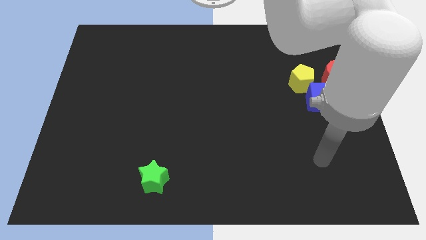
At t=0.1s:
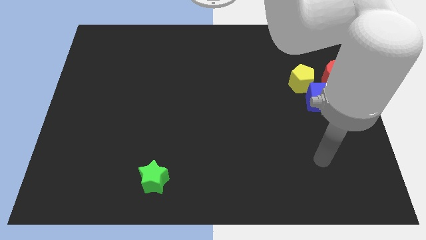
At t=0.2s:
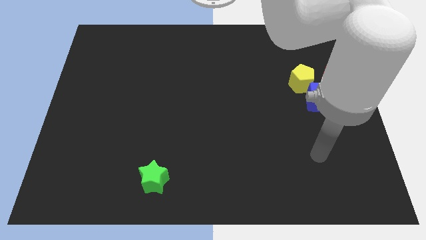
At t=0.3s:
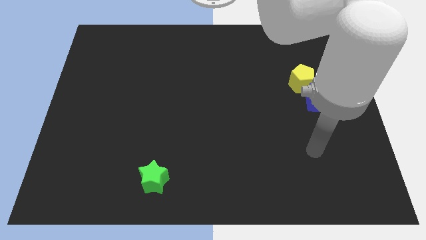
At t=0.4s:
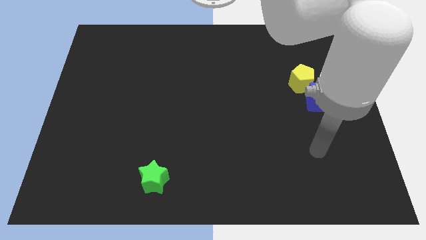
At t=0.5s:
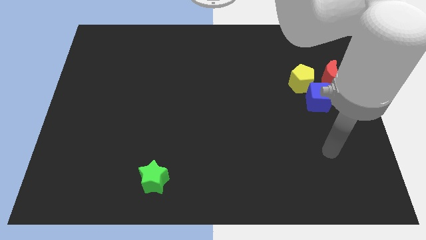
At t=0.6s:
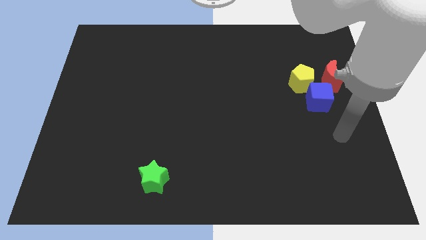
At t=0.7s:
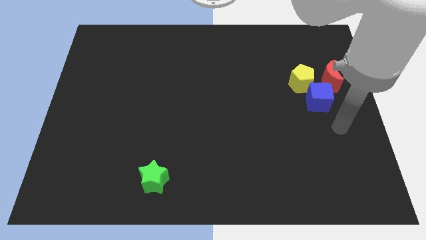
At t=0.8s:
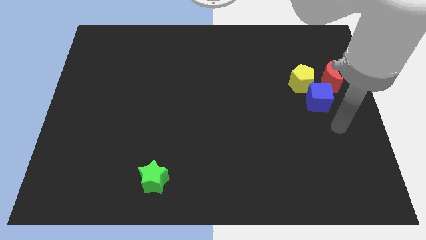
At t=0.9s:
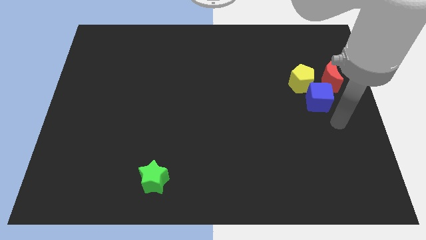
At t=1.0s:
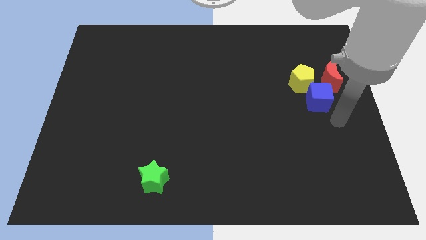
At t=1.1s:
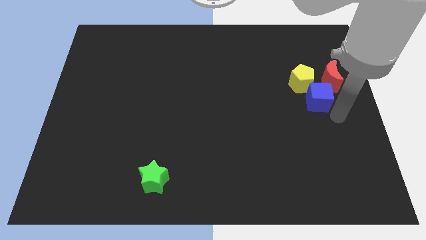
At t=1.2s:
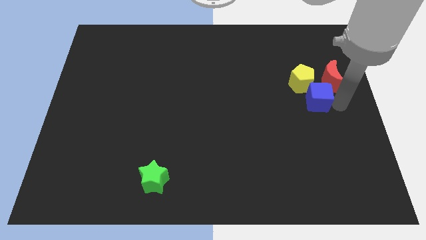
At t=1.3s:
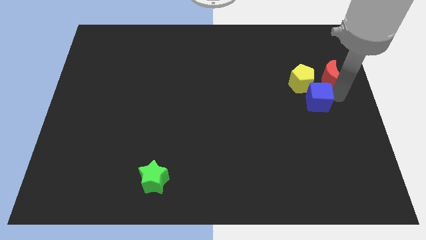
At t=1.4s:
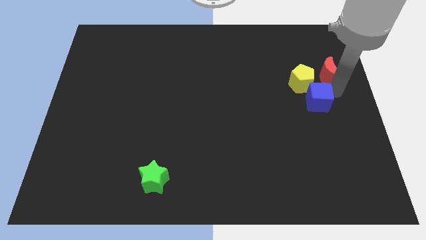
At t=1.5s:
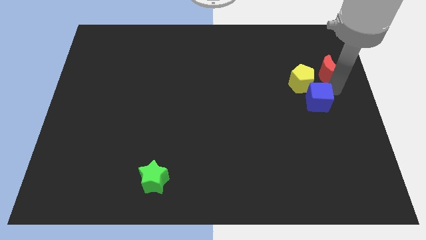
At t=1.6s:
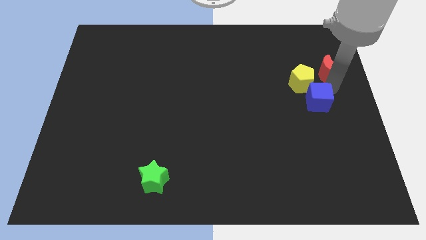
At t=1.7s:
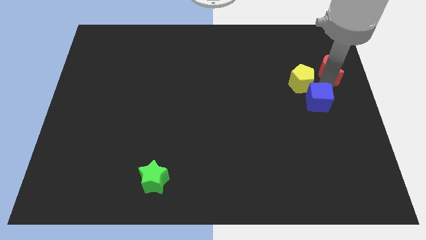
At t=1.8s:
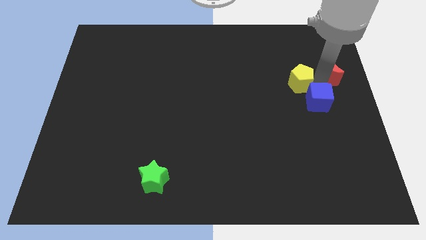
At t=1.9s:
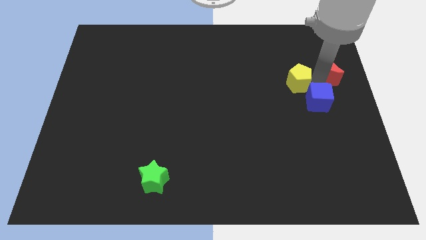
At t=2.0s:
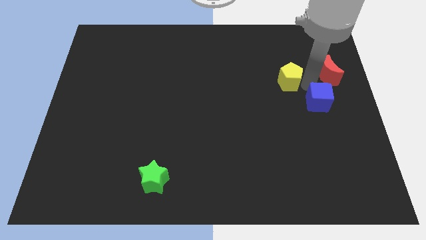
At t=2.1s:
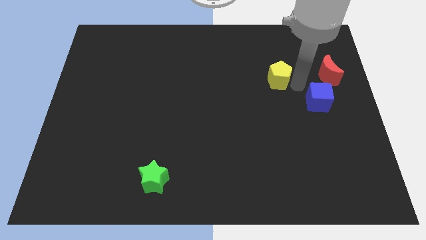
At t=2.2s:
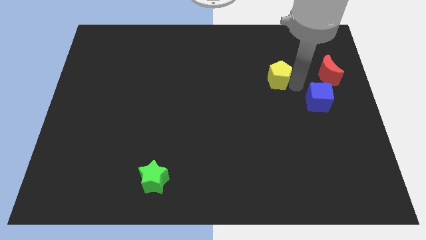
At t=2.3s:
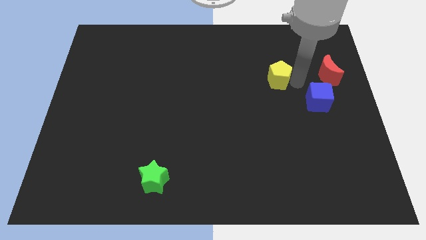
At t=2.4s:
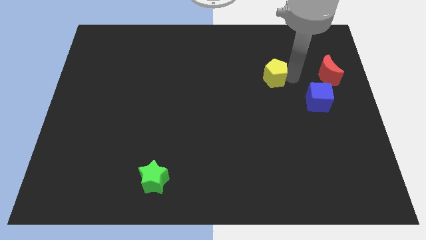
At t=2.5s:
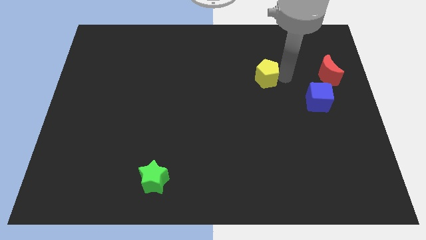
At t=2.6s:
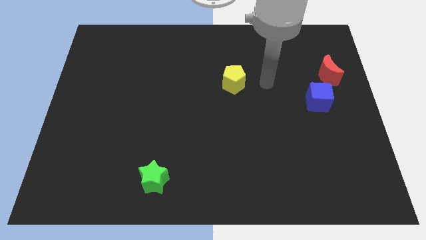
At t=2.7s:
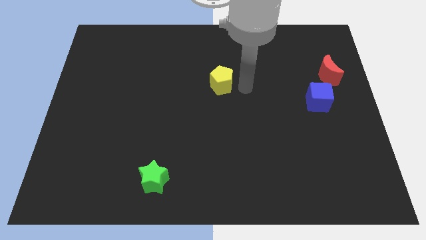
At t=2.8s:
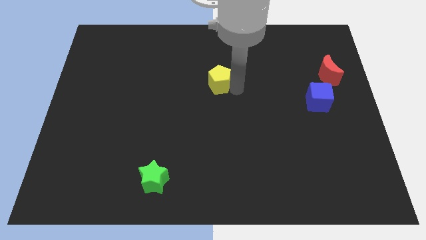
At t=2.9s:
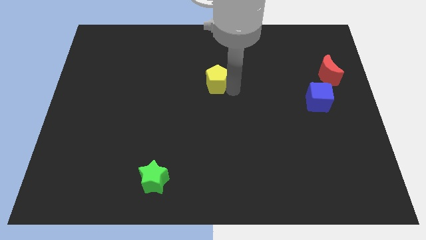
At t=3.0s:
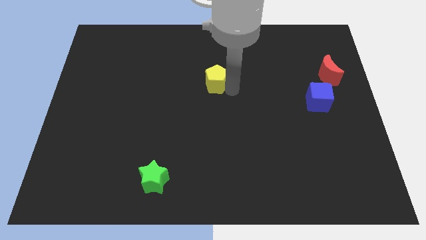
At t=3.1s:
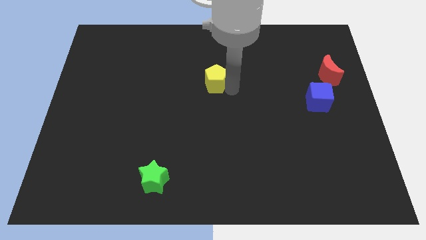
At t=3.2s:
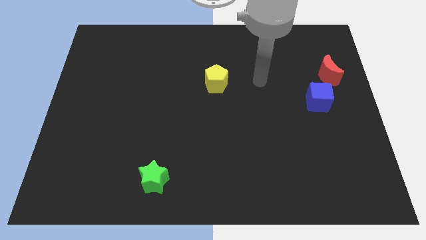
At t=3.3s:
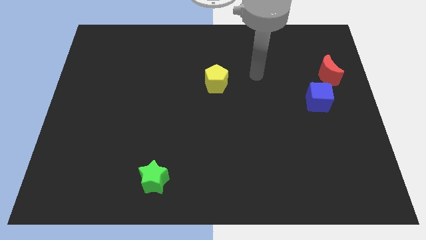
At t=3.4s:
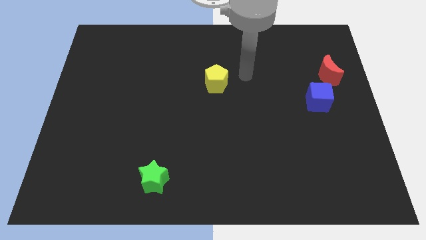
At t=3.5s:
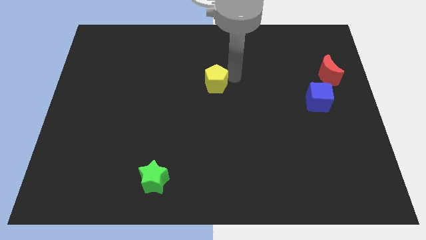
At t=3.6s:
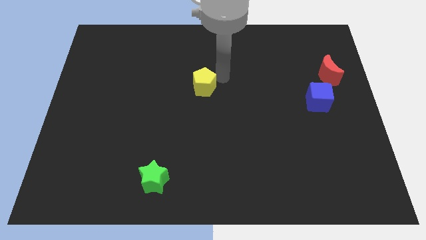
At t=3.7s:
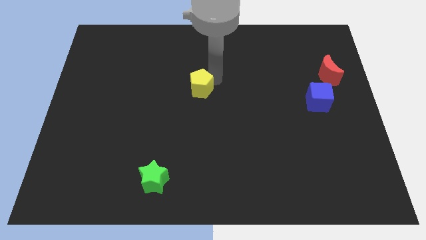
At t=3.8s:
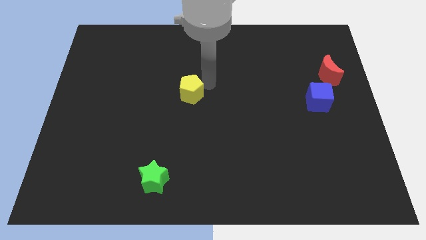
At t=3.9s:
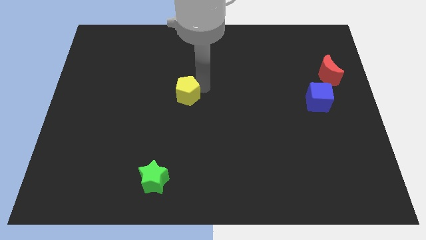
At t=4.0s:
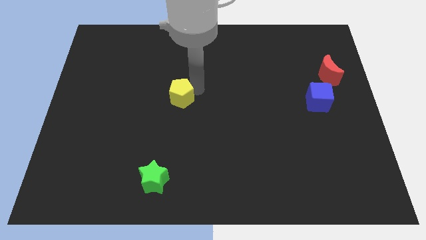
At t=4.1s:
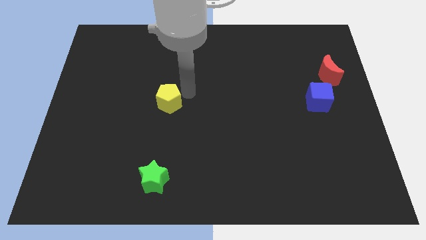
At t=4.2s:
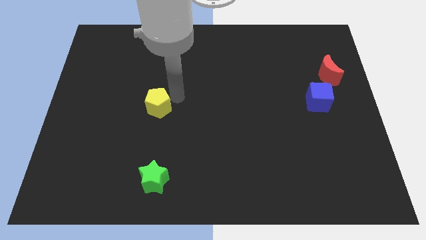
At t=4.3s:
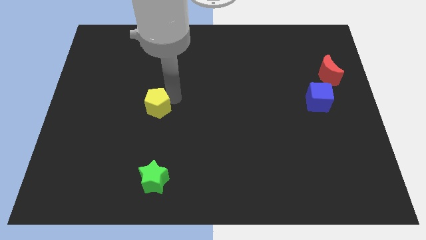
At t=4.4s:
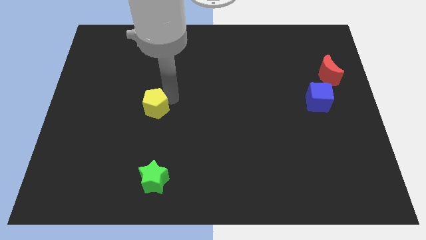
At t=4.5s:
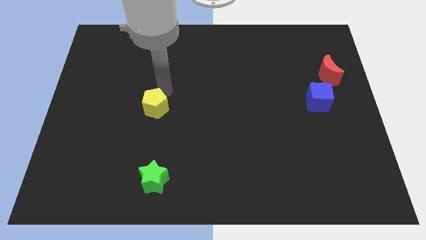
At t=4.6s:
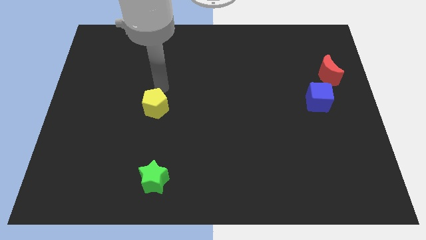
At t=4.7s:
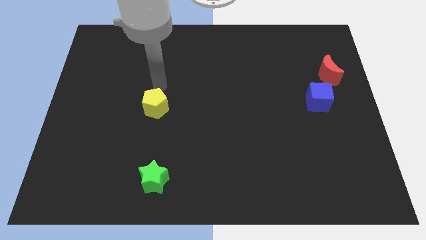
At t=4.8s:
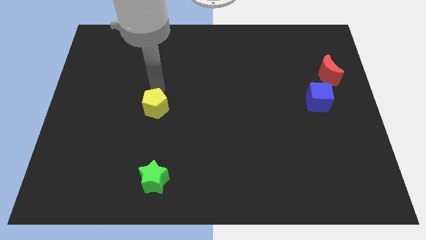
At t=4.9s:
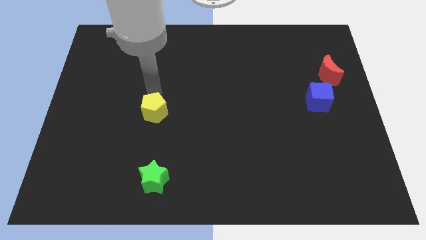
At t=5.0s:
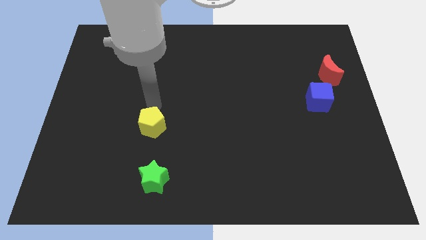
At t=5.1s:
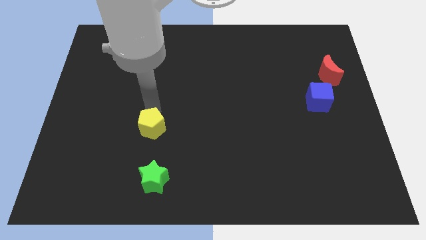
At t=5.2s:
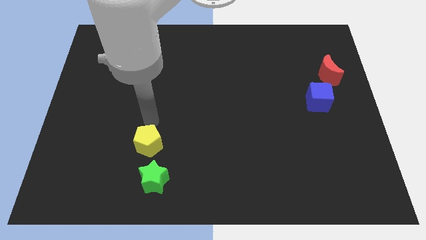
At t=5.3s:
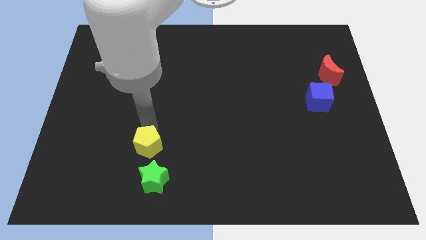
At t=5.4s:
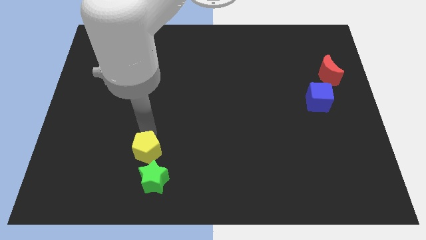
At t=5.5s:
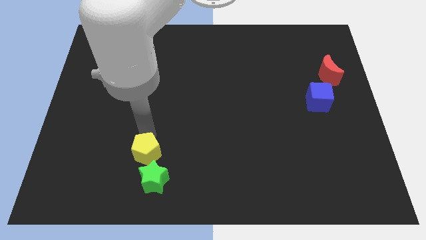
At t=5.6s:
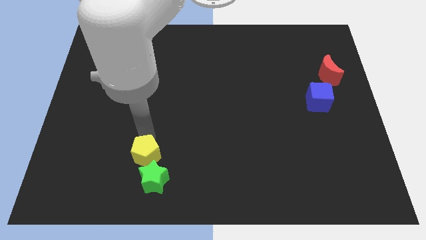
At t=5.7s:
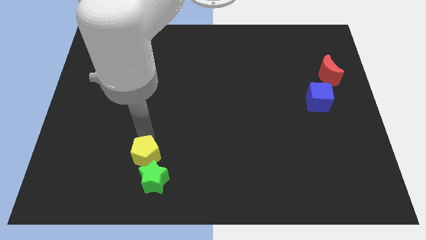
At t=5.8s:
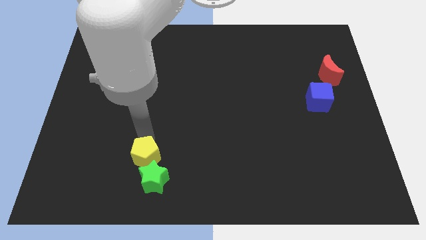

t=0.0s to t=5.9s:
put the yellow pentagon to the green star

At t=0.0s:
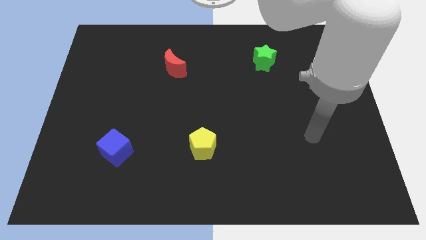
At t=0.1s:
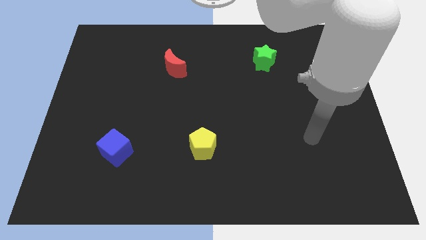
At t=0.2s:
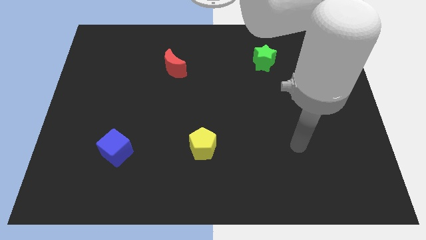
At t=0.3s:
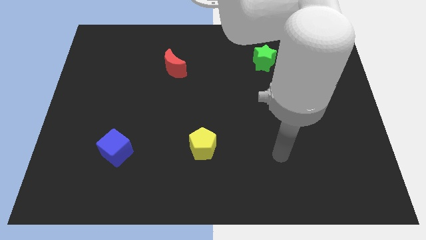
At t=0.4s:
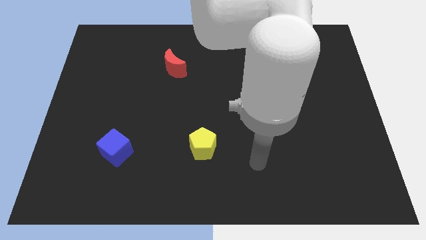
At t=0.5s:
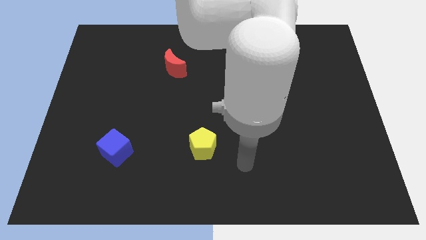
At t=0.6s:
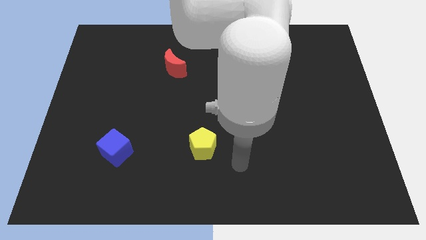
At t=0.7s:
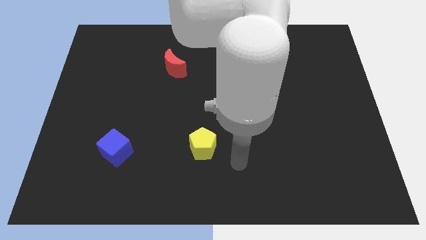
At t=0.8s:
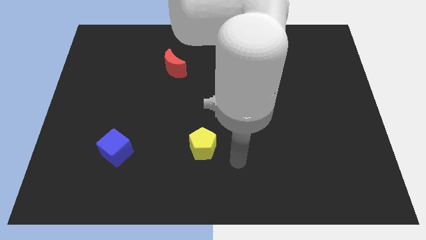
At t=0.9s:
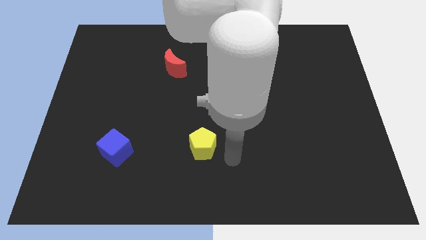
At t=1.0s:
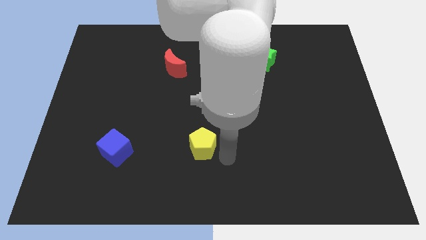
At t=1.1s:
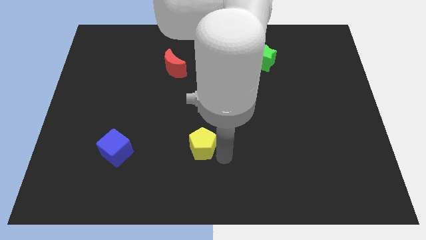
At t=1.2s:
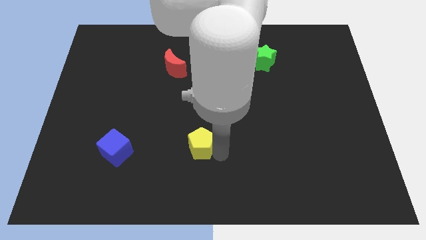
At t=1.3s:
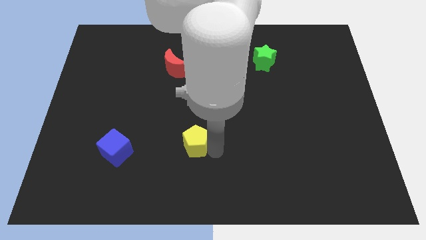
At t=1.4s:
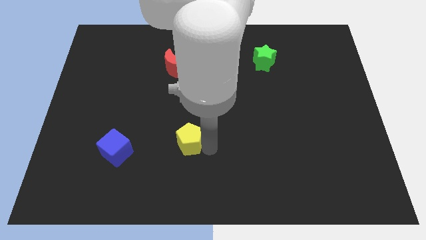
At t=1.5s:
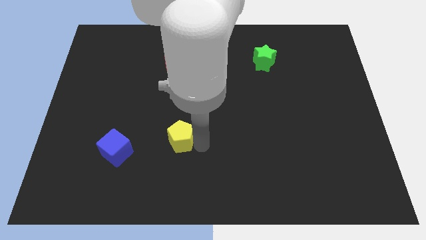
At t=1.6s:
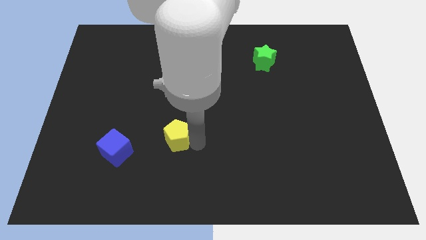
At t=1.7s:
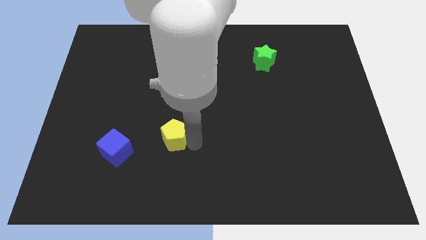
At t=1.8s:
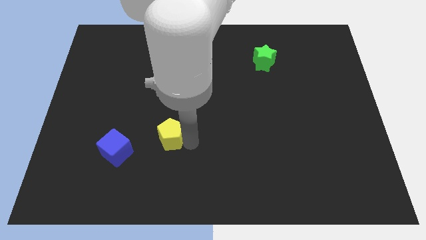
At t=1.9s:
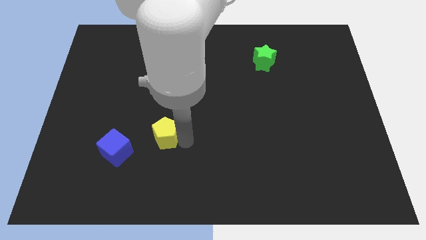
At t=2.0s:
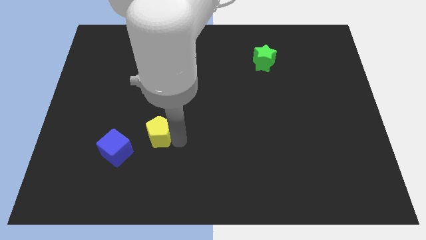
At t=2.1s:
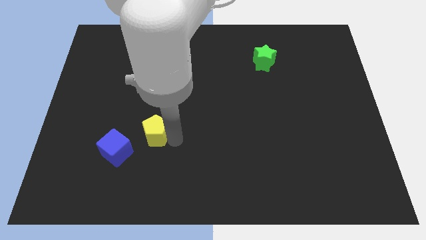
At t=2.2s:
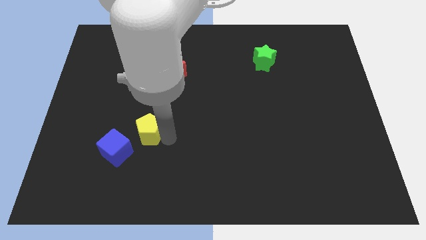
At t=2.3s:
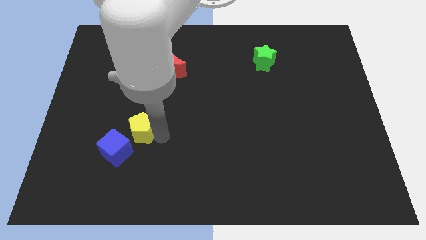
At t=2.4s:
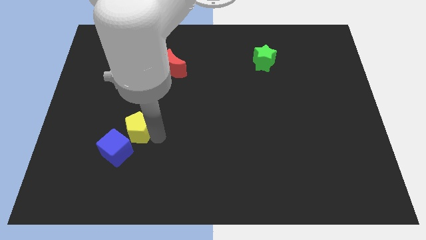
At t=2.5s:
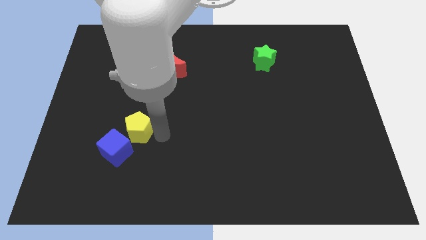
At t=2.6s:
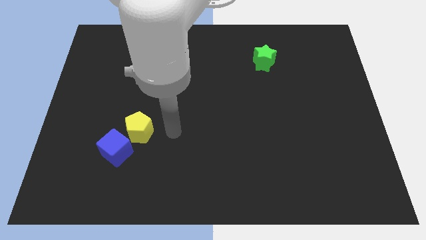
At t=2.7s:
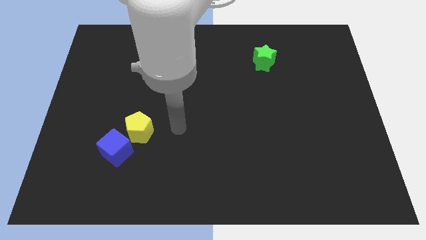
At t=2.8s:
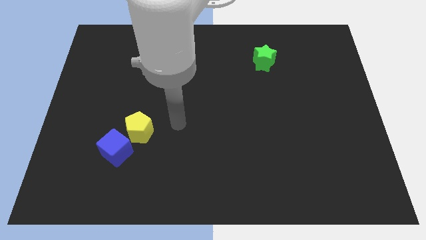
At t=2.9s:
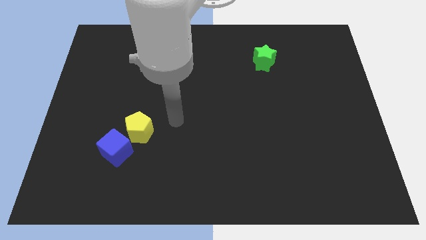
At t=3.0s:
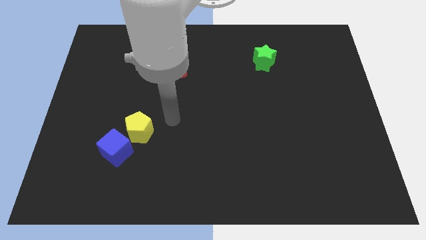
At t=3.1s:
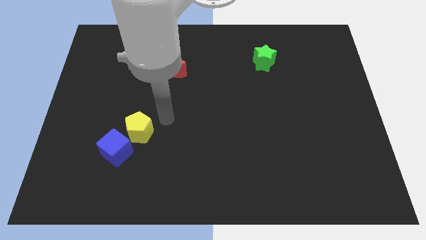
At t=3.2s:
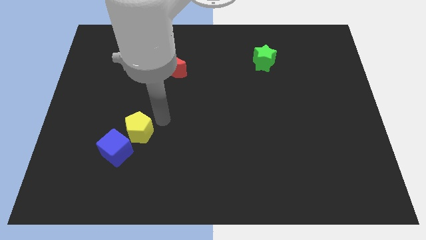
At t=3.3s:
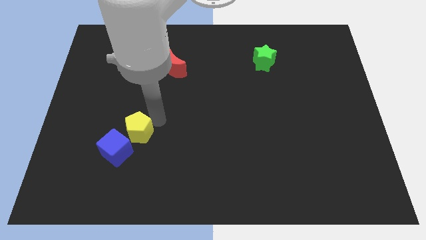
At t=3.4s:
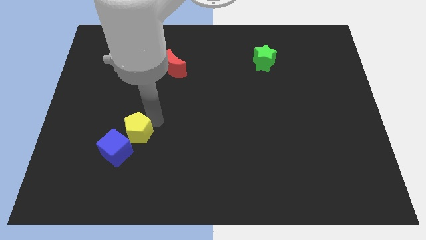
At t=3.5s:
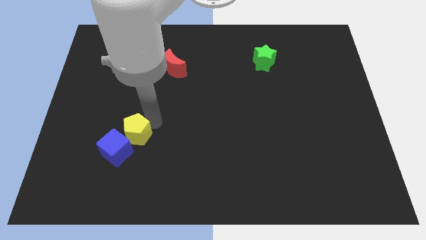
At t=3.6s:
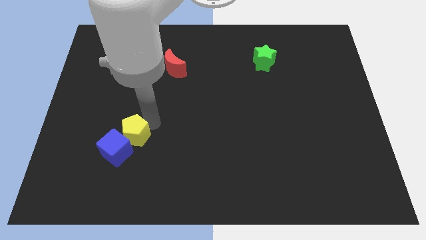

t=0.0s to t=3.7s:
move the yellow pentagon close to the cube
